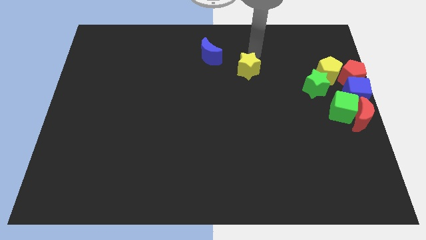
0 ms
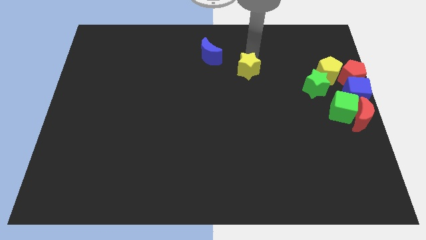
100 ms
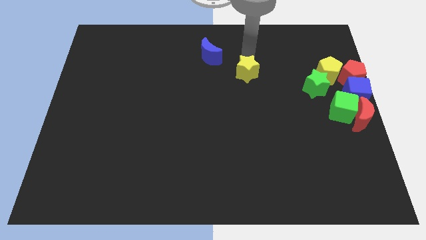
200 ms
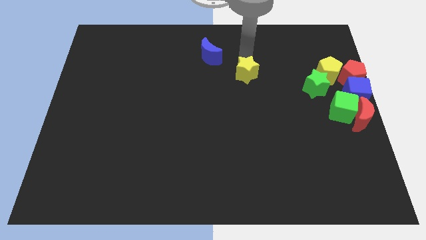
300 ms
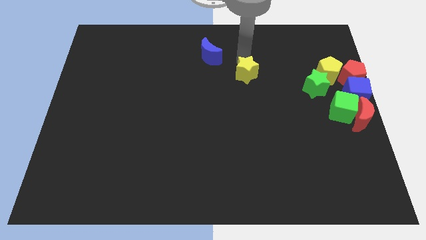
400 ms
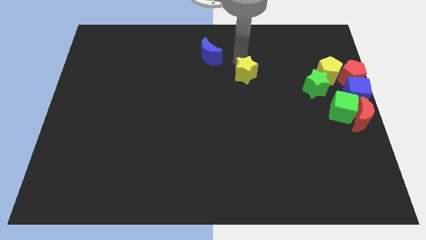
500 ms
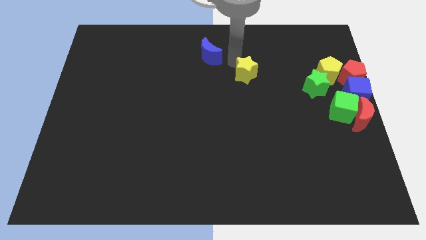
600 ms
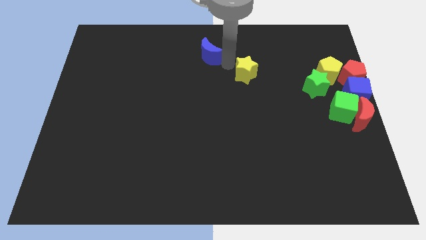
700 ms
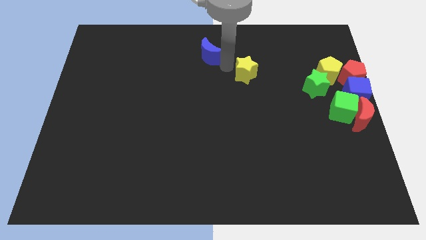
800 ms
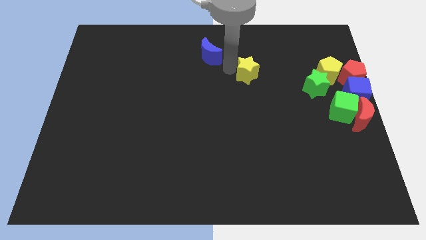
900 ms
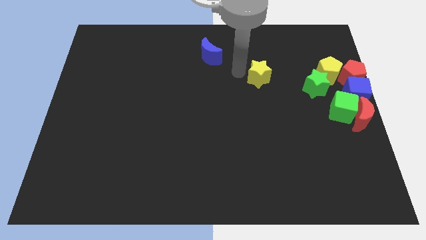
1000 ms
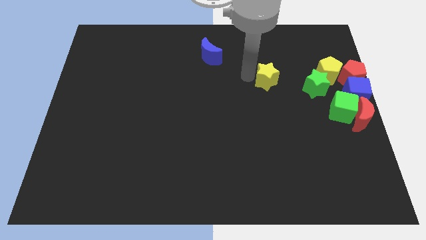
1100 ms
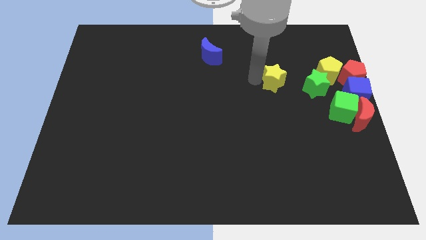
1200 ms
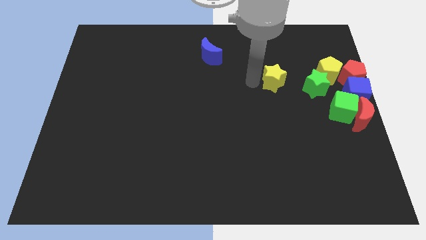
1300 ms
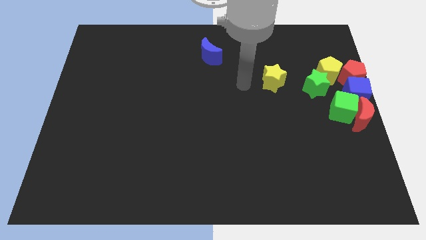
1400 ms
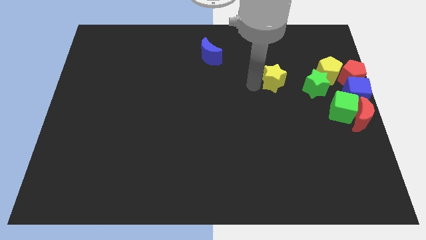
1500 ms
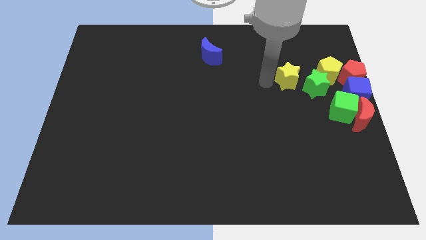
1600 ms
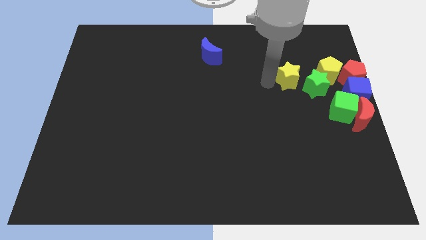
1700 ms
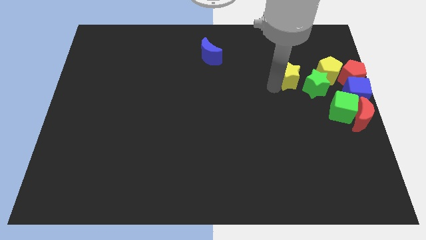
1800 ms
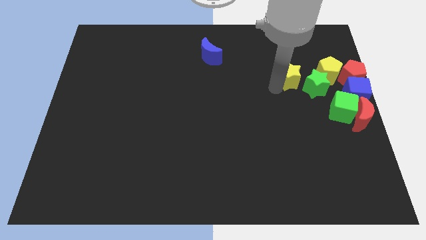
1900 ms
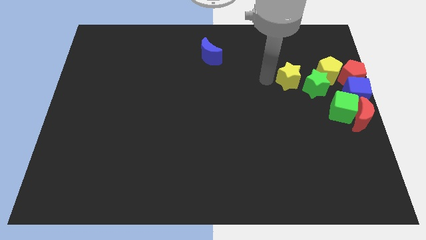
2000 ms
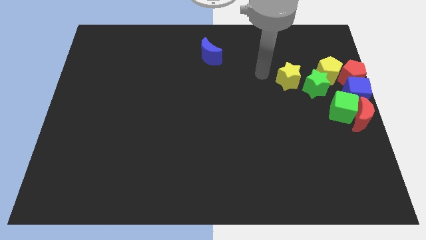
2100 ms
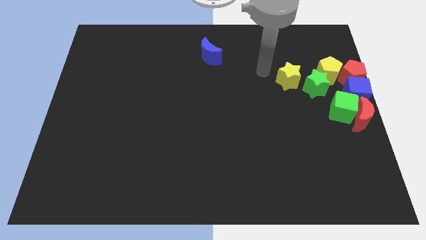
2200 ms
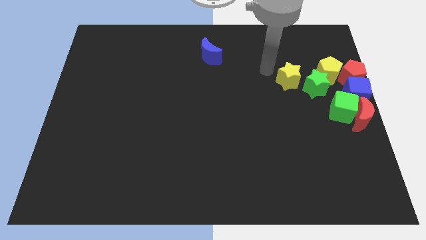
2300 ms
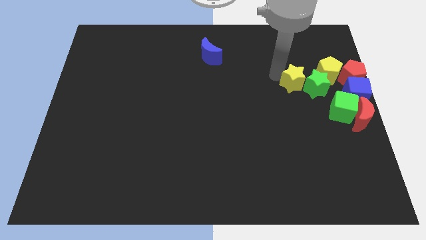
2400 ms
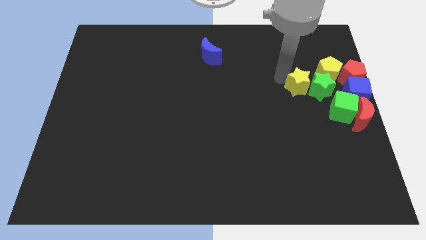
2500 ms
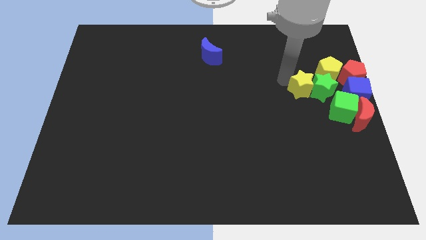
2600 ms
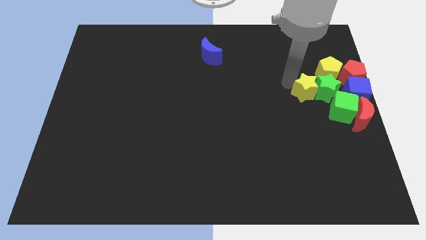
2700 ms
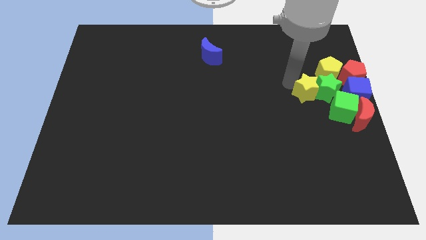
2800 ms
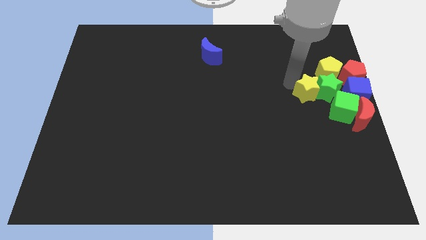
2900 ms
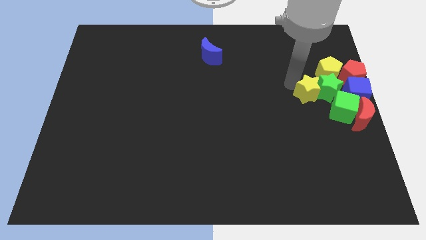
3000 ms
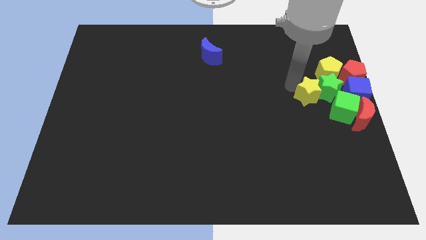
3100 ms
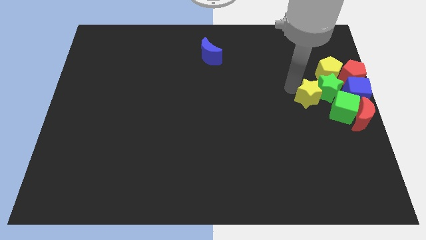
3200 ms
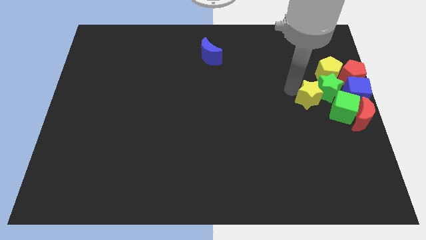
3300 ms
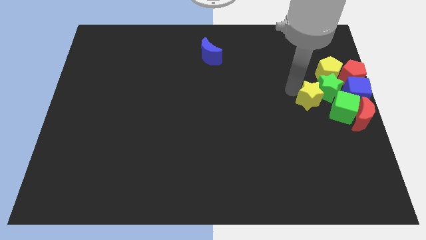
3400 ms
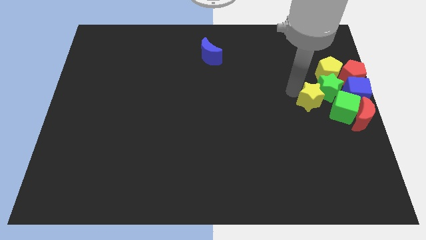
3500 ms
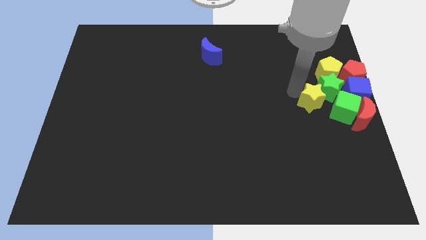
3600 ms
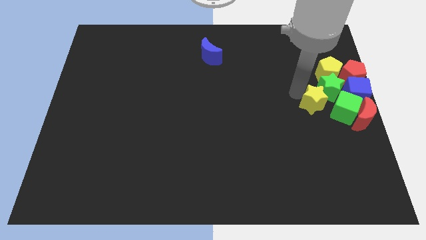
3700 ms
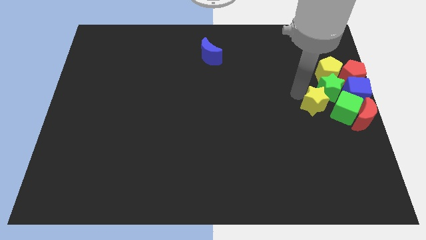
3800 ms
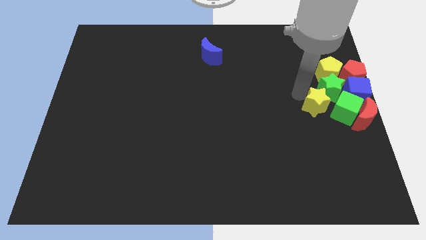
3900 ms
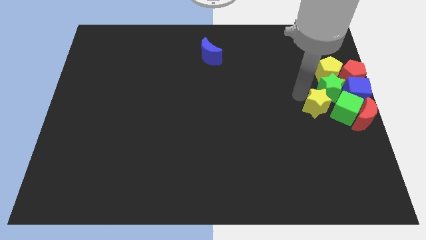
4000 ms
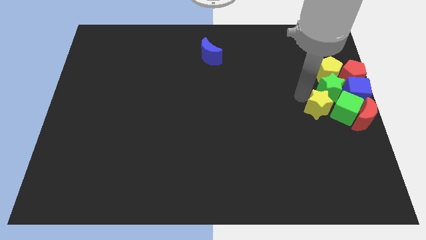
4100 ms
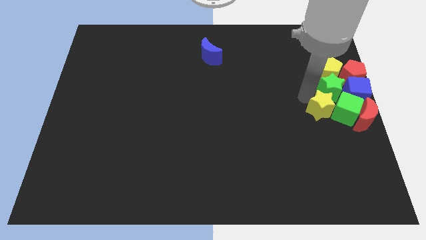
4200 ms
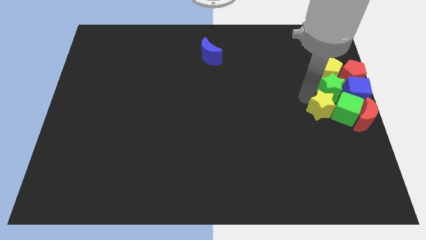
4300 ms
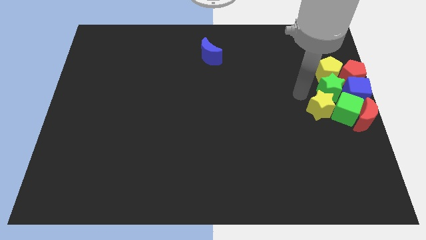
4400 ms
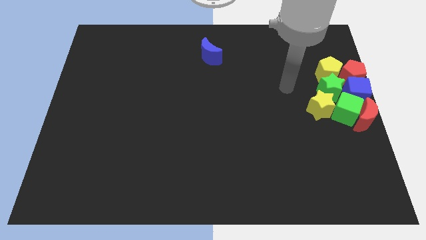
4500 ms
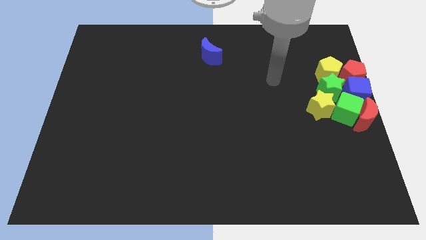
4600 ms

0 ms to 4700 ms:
push the yellow star to the left of the green cube

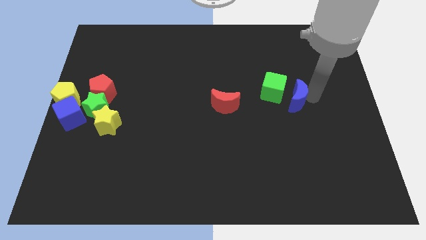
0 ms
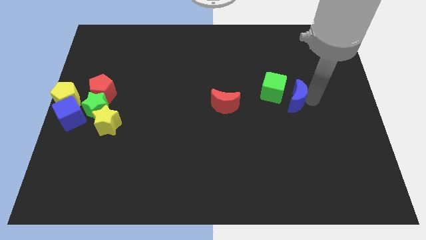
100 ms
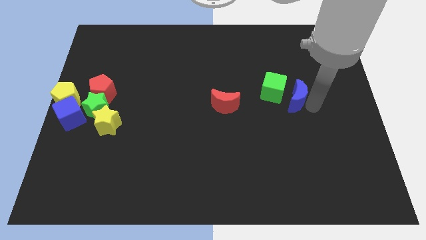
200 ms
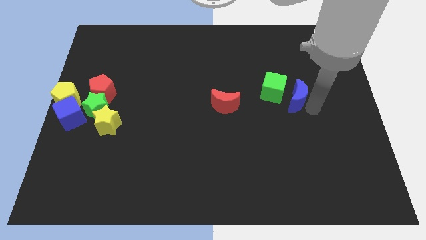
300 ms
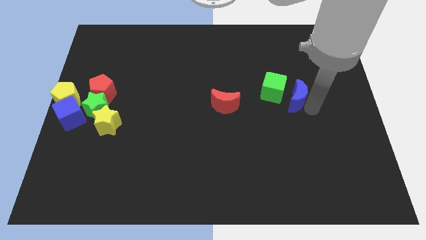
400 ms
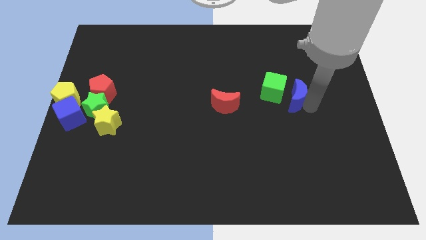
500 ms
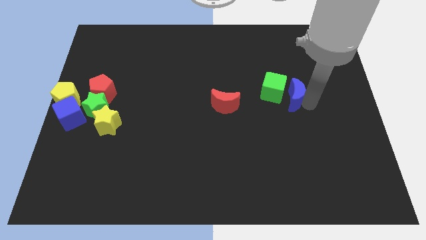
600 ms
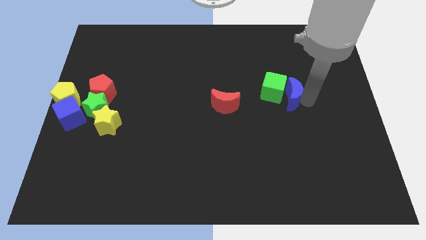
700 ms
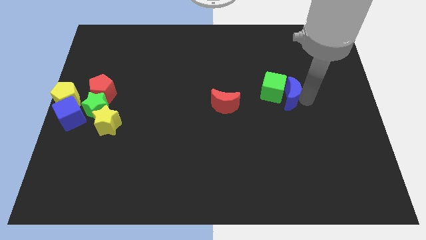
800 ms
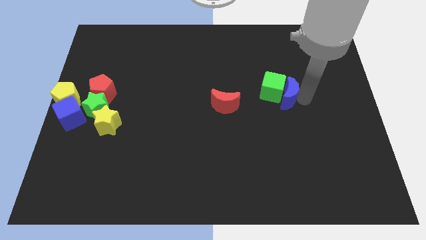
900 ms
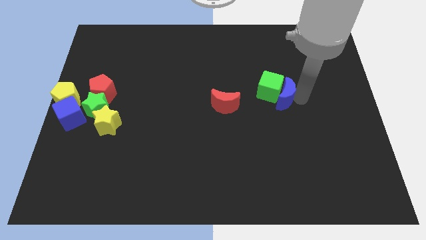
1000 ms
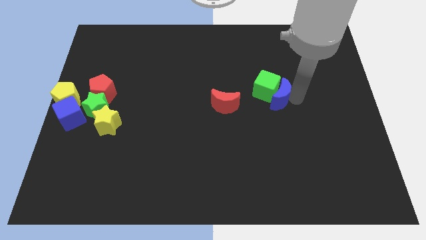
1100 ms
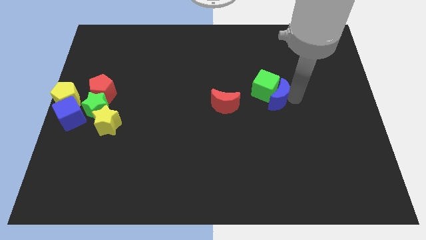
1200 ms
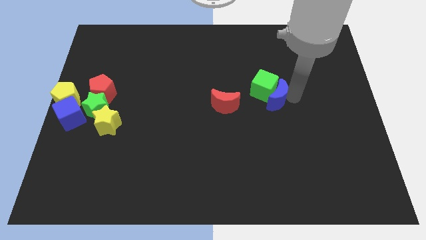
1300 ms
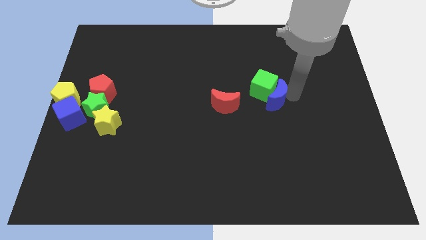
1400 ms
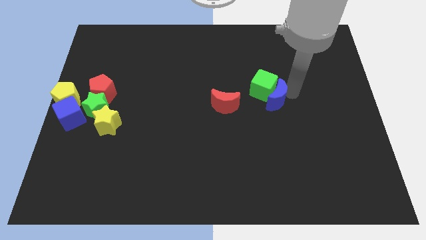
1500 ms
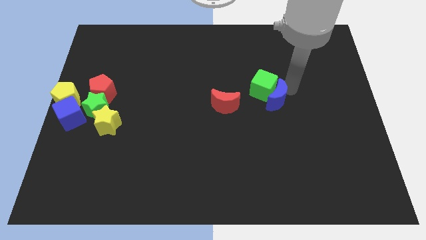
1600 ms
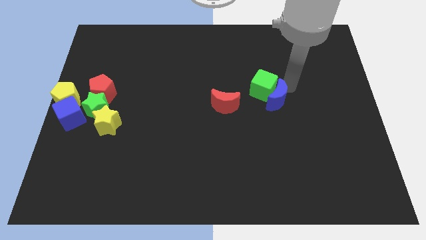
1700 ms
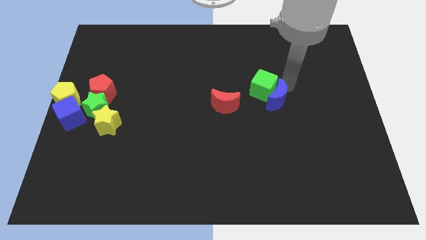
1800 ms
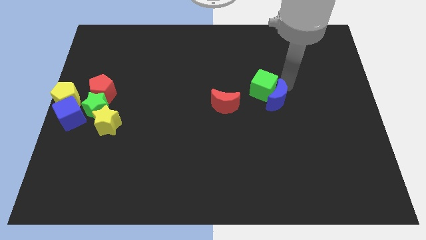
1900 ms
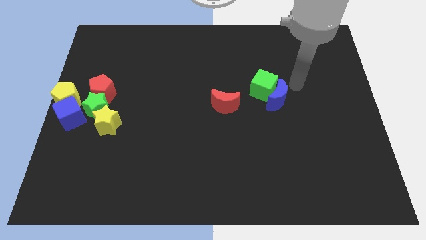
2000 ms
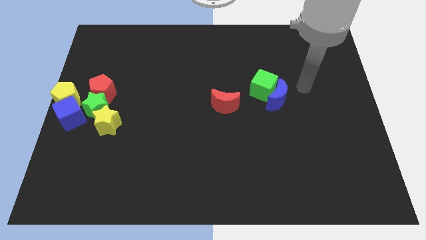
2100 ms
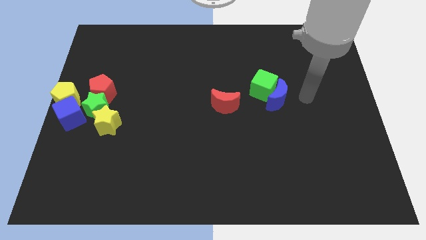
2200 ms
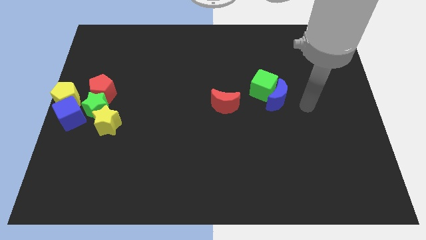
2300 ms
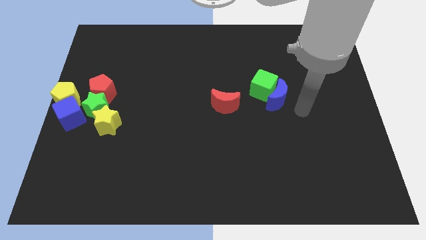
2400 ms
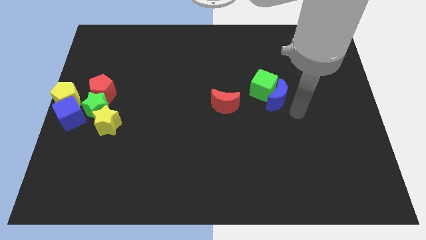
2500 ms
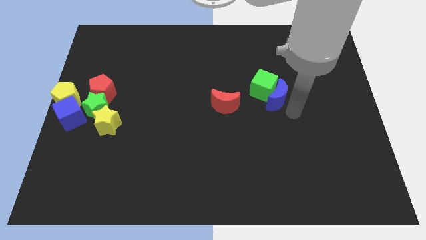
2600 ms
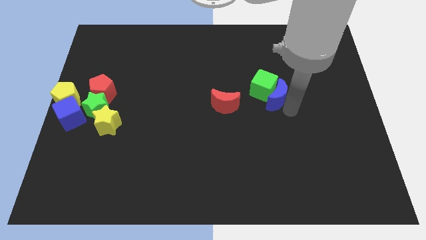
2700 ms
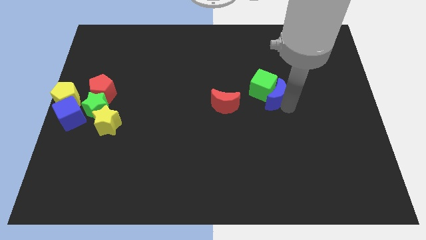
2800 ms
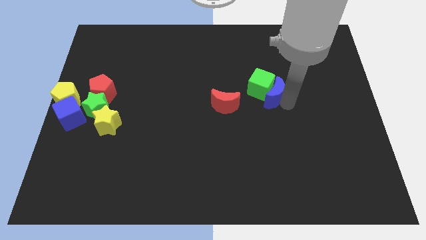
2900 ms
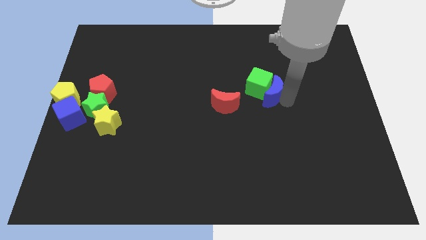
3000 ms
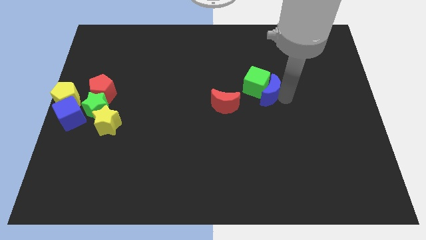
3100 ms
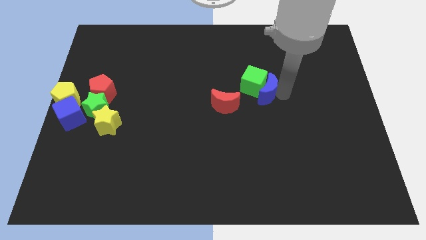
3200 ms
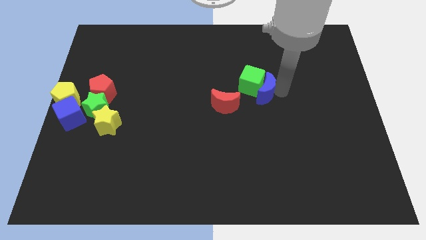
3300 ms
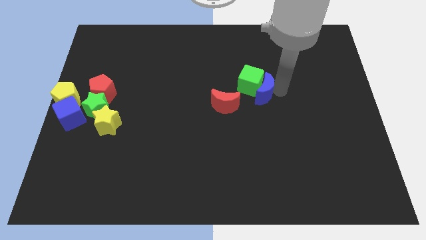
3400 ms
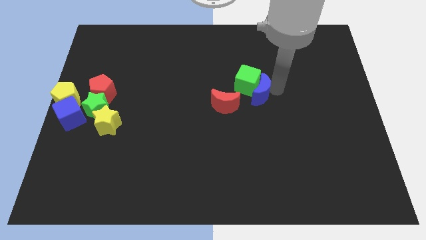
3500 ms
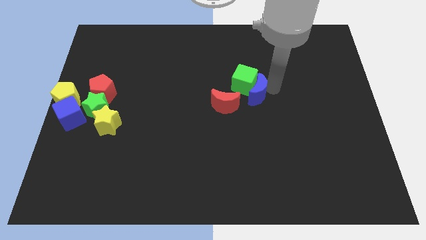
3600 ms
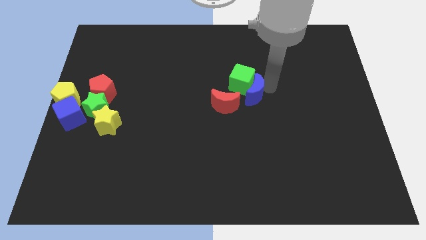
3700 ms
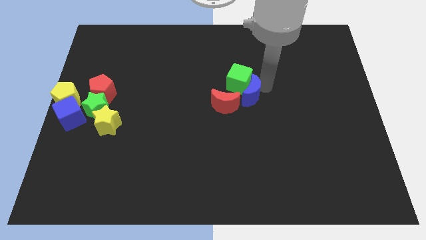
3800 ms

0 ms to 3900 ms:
push blue moon along with green cube towards the center

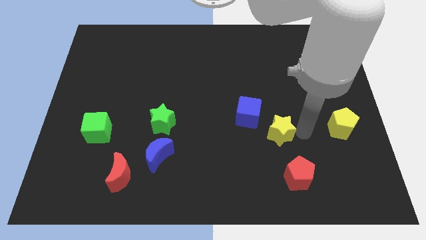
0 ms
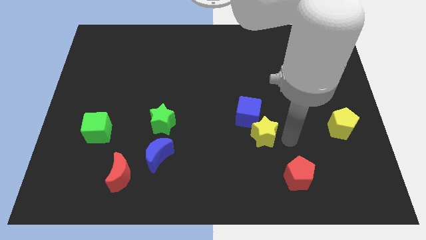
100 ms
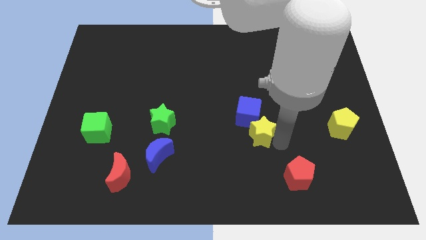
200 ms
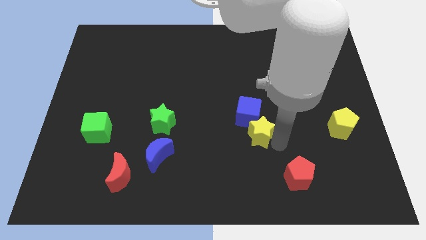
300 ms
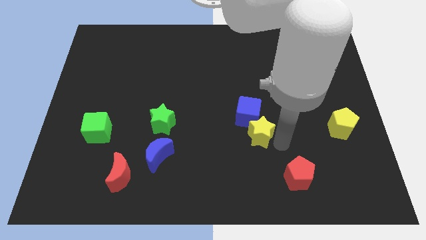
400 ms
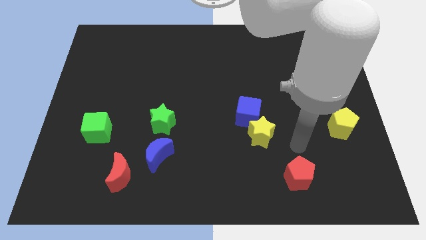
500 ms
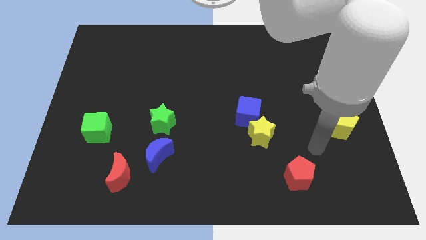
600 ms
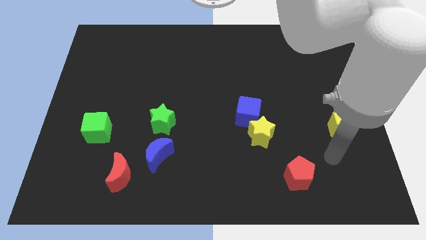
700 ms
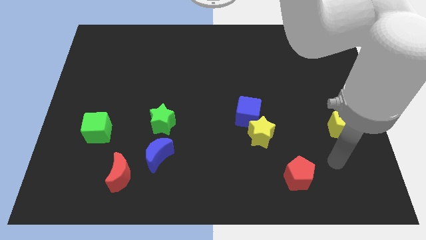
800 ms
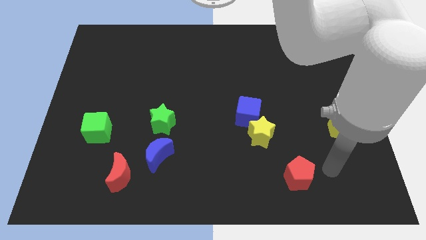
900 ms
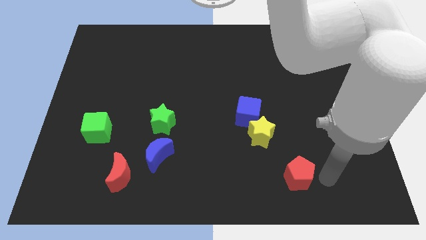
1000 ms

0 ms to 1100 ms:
move the yellow star towards the blue cube
